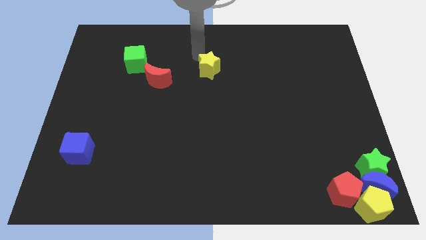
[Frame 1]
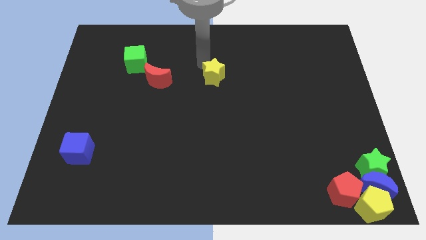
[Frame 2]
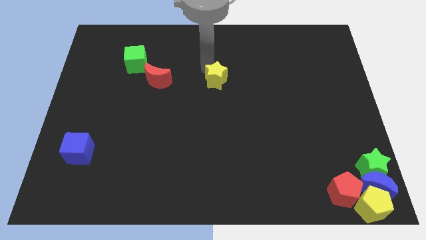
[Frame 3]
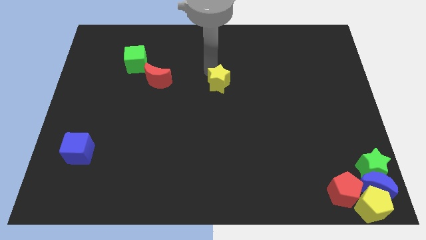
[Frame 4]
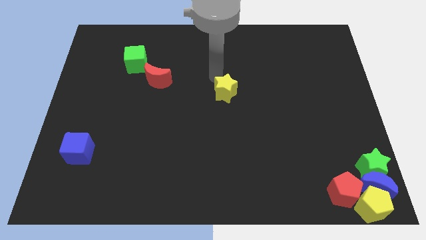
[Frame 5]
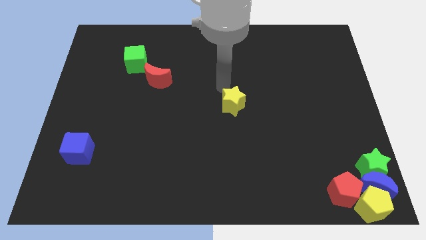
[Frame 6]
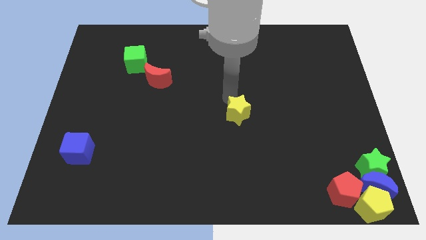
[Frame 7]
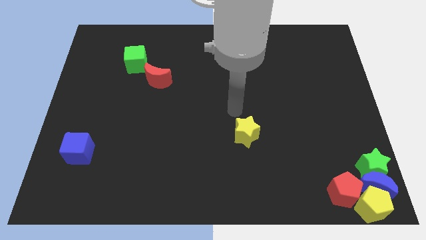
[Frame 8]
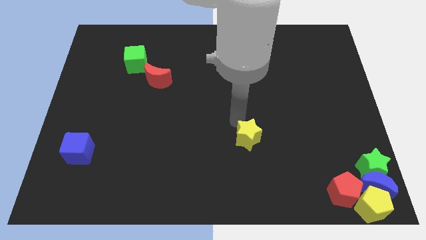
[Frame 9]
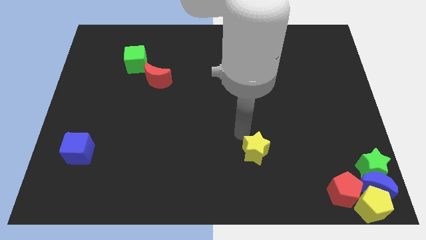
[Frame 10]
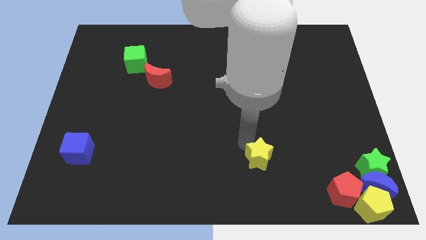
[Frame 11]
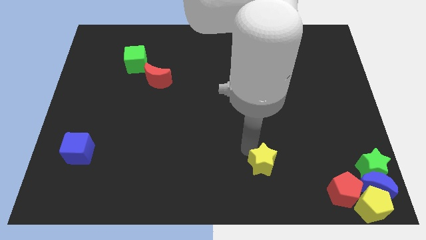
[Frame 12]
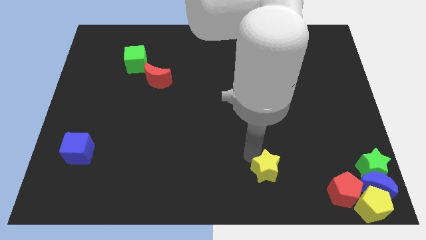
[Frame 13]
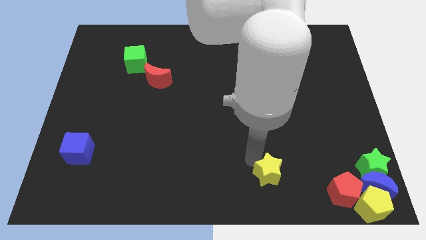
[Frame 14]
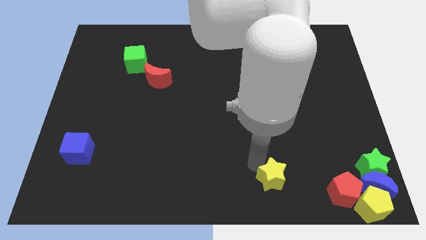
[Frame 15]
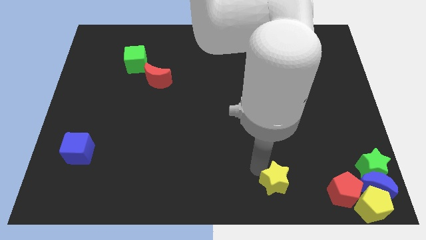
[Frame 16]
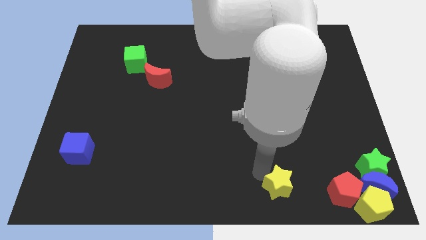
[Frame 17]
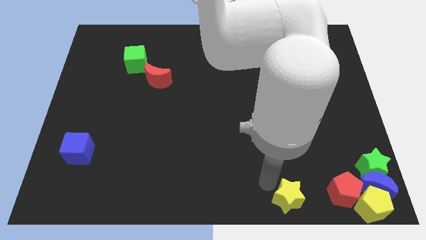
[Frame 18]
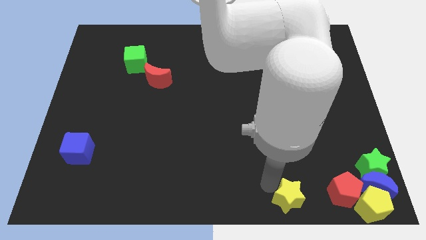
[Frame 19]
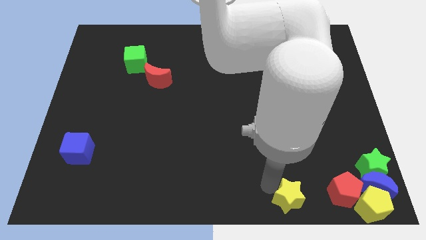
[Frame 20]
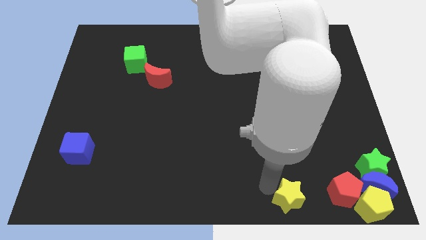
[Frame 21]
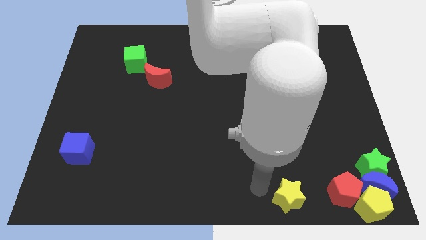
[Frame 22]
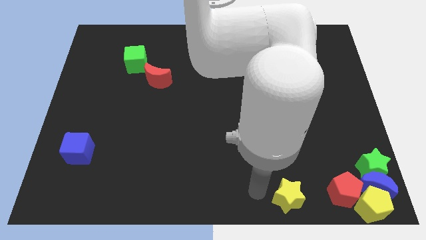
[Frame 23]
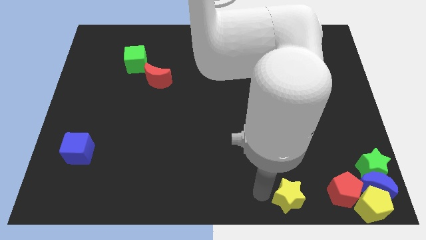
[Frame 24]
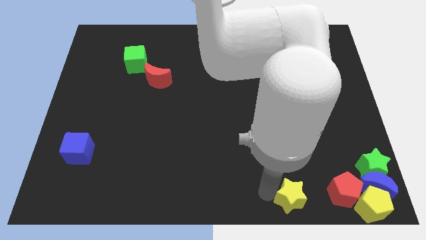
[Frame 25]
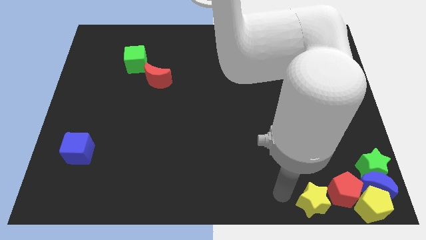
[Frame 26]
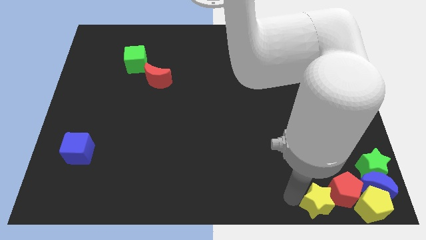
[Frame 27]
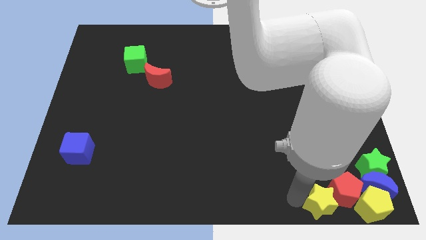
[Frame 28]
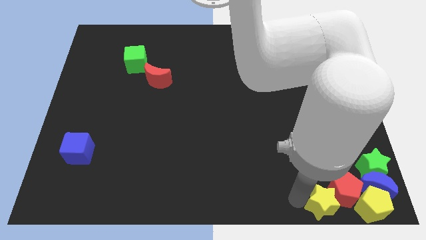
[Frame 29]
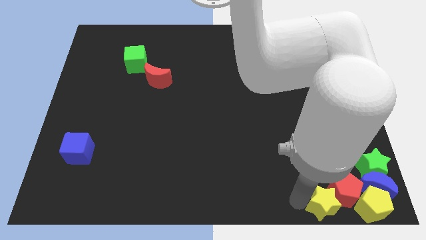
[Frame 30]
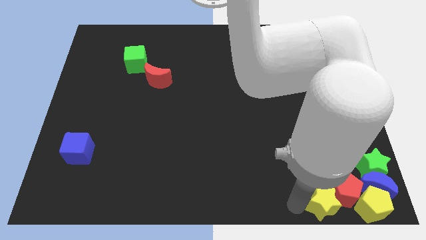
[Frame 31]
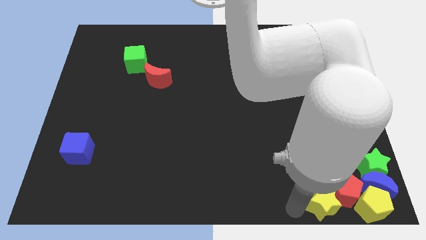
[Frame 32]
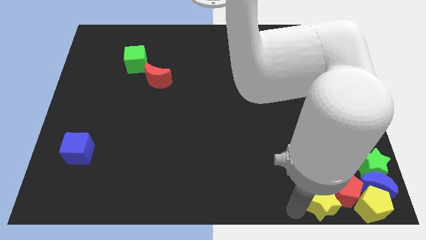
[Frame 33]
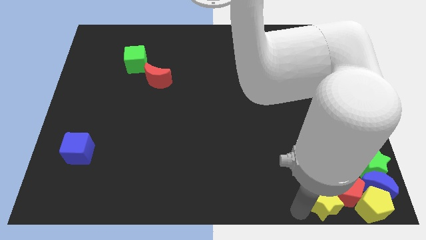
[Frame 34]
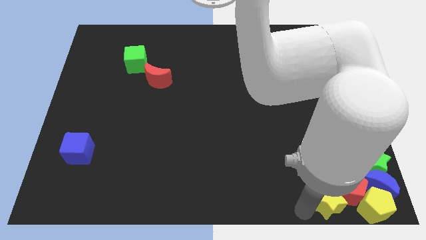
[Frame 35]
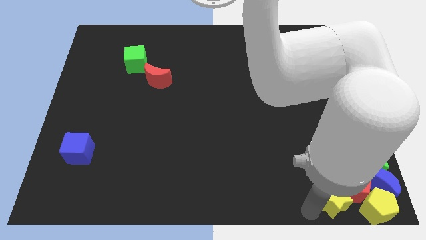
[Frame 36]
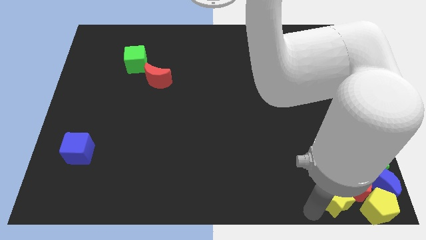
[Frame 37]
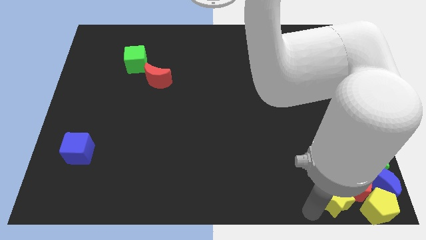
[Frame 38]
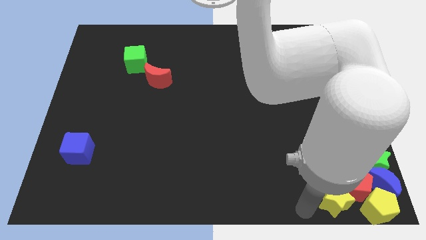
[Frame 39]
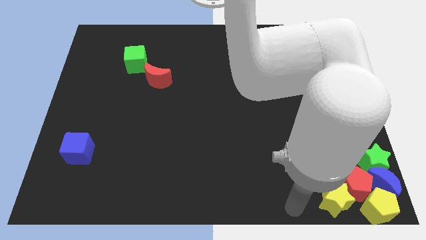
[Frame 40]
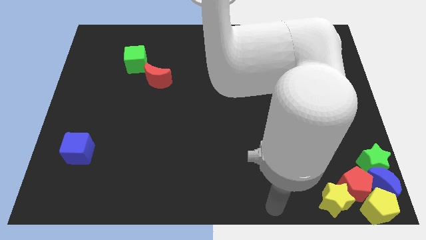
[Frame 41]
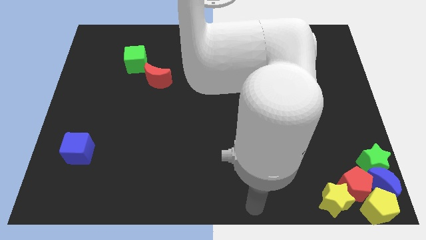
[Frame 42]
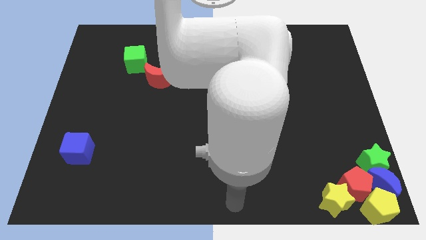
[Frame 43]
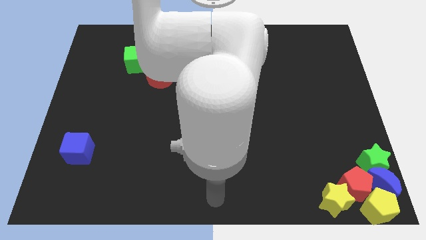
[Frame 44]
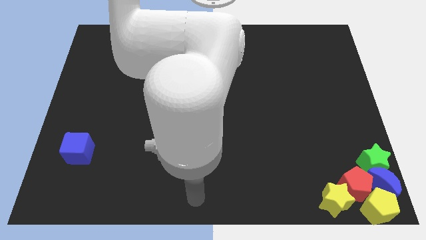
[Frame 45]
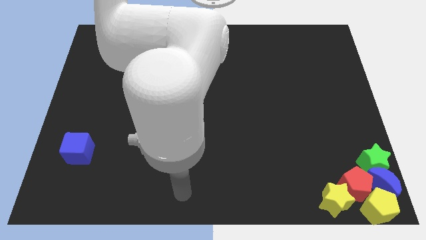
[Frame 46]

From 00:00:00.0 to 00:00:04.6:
move the yellow star into the red pentagon

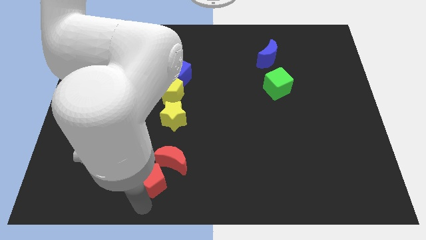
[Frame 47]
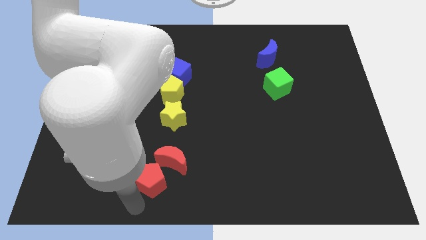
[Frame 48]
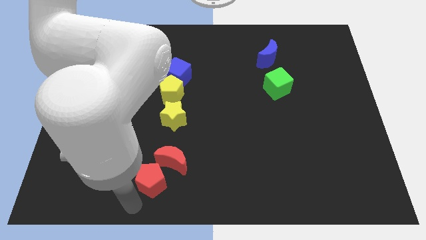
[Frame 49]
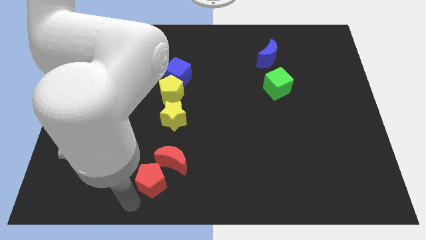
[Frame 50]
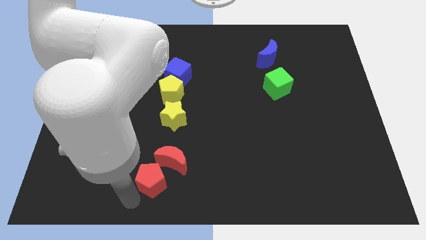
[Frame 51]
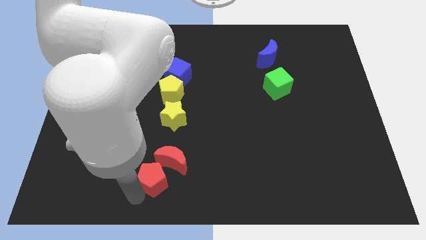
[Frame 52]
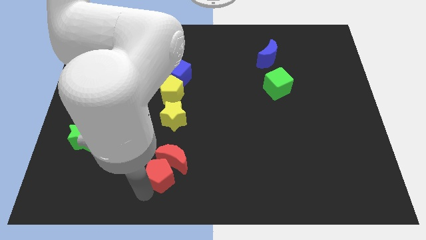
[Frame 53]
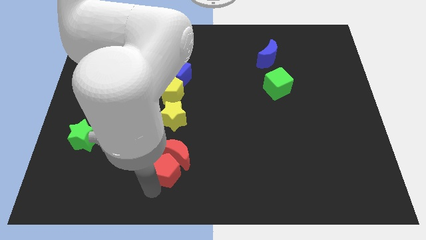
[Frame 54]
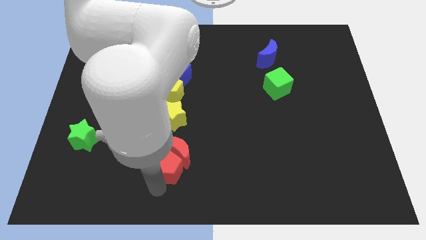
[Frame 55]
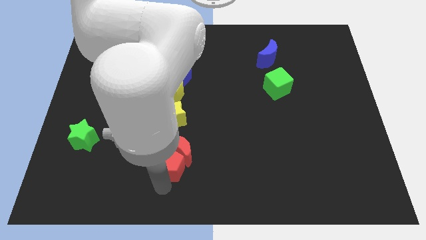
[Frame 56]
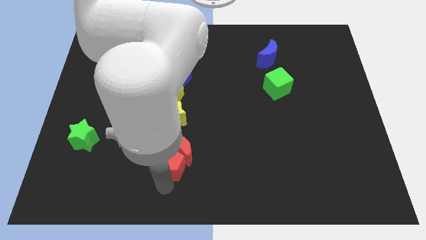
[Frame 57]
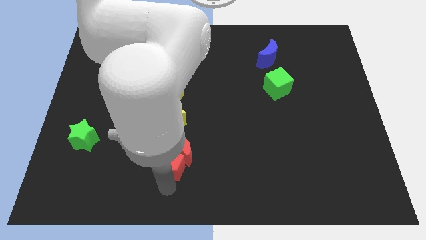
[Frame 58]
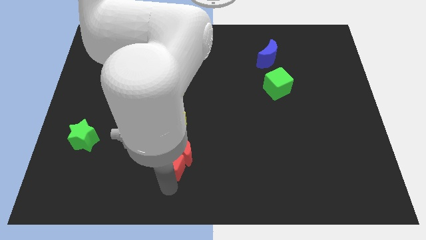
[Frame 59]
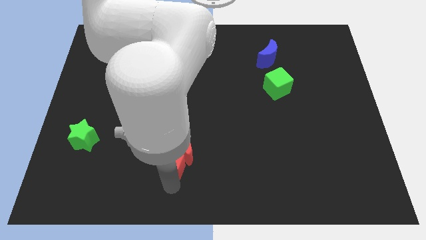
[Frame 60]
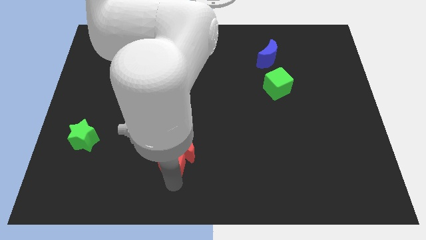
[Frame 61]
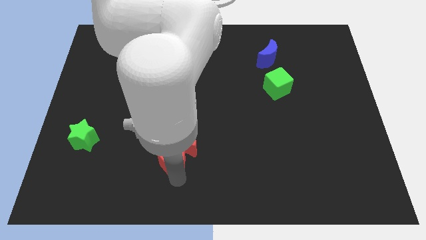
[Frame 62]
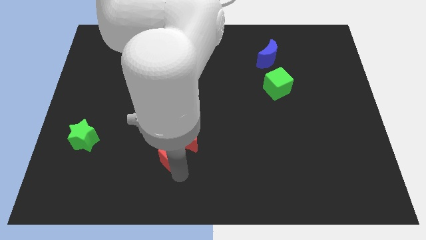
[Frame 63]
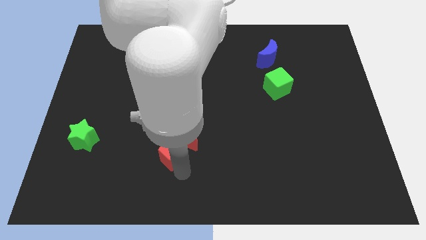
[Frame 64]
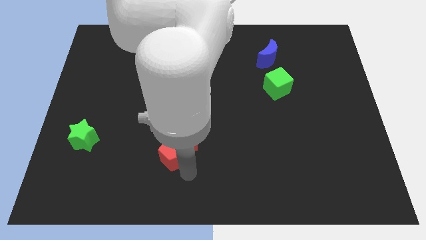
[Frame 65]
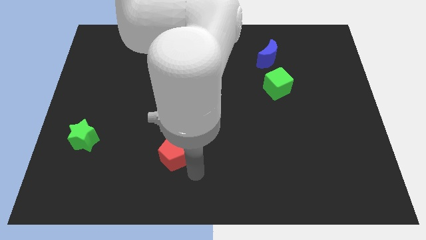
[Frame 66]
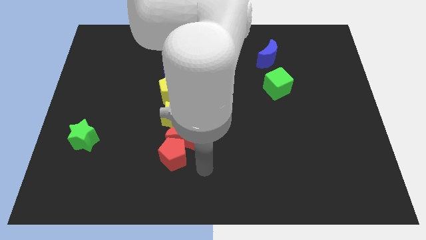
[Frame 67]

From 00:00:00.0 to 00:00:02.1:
move red crescent with red pentagon

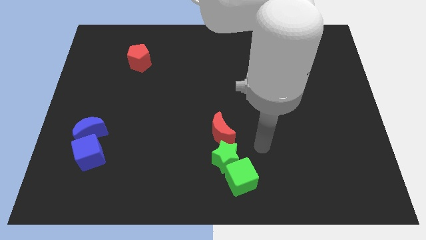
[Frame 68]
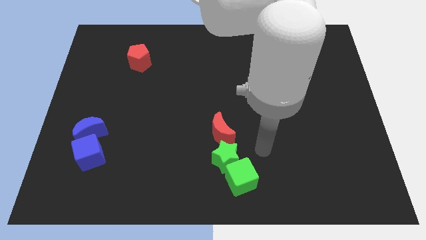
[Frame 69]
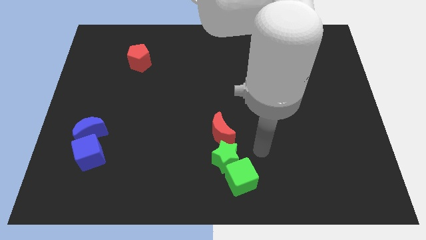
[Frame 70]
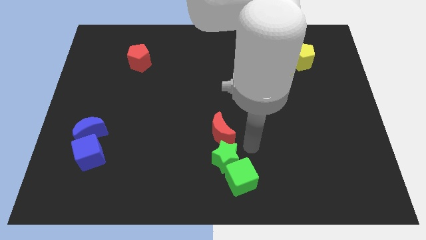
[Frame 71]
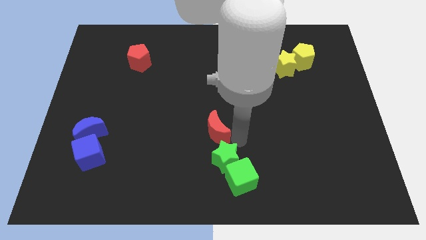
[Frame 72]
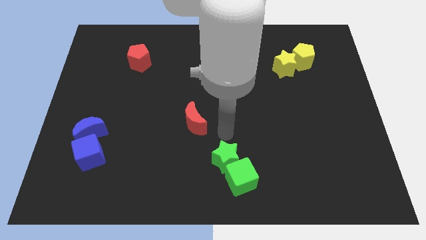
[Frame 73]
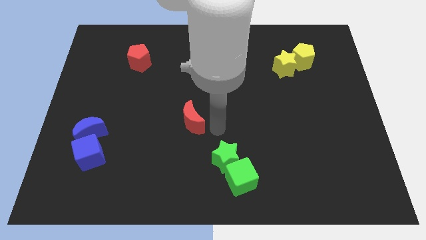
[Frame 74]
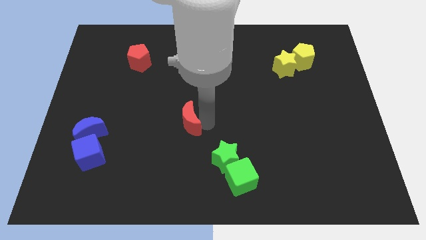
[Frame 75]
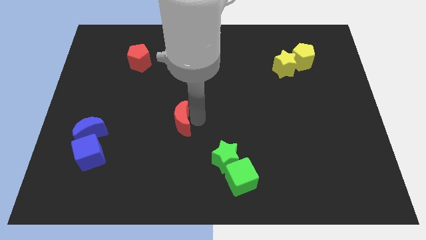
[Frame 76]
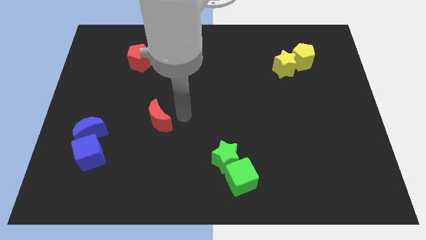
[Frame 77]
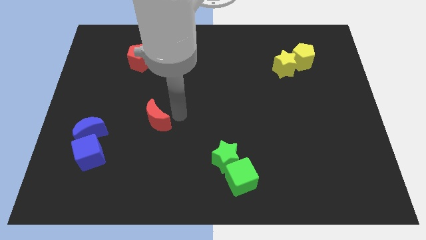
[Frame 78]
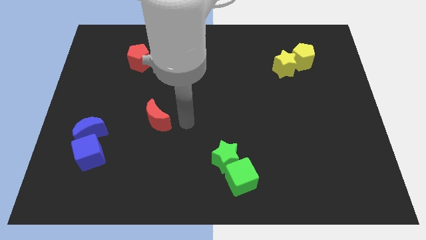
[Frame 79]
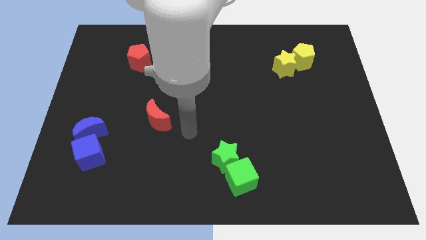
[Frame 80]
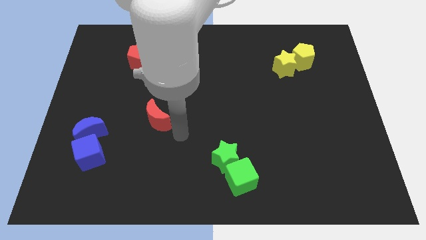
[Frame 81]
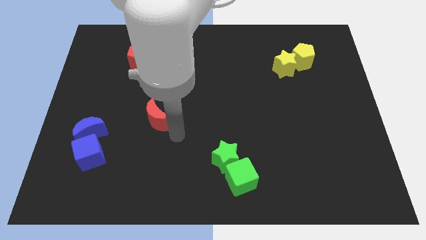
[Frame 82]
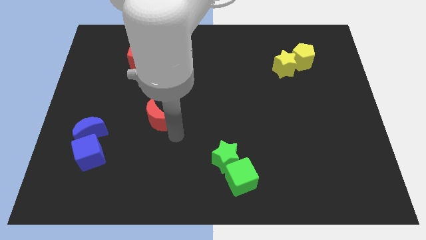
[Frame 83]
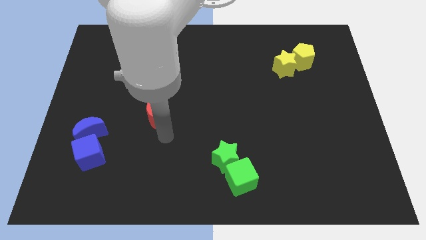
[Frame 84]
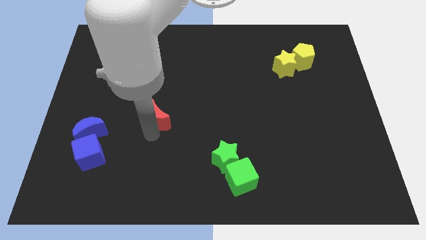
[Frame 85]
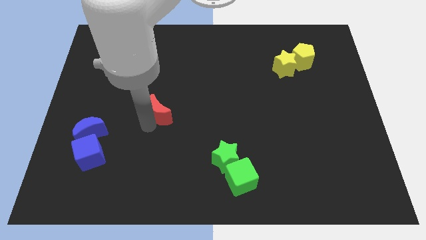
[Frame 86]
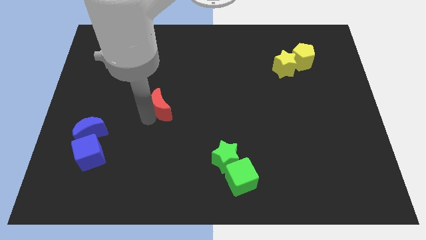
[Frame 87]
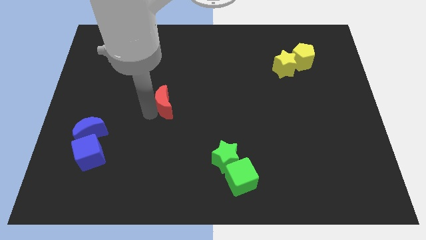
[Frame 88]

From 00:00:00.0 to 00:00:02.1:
separate red crescent from green star

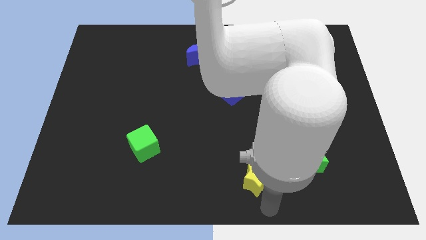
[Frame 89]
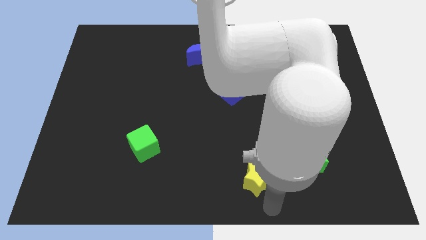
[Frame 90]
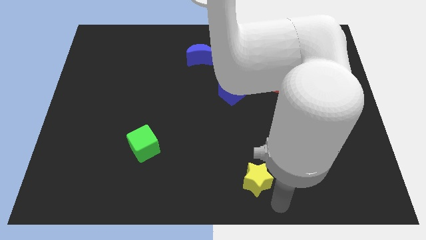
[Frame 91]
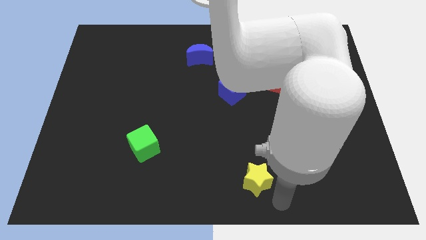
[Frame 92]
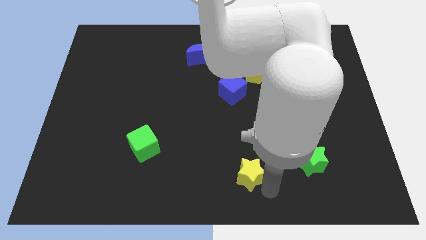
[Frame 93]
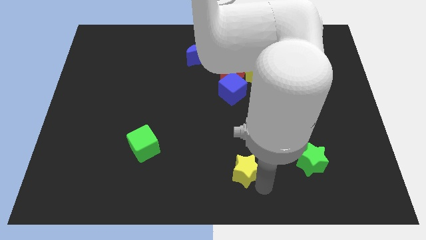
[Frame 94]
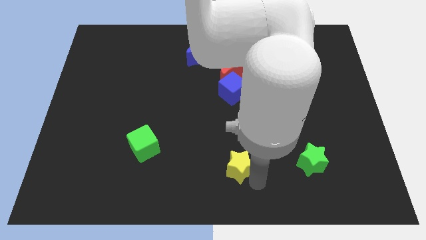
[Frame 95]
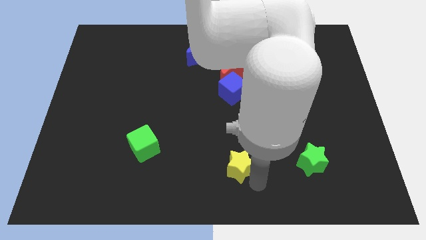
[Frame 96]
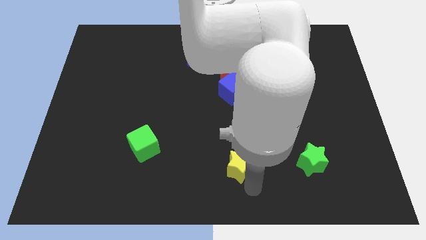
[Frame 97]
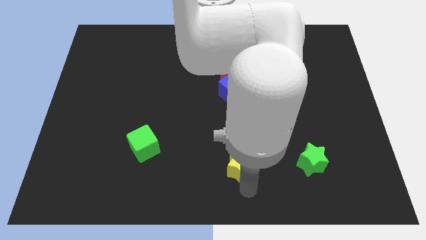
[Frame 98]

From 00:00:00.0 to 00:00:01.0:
place the yellow star parallel to green star
